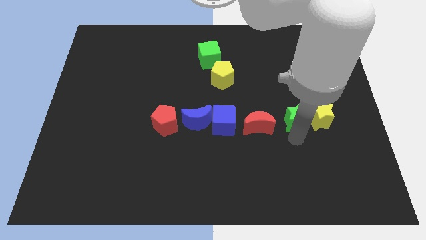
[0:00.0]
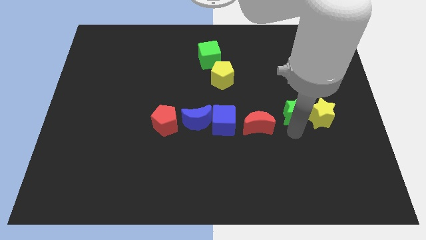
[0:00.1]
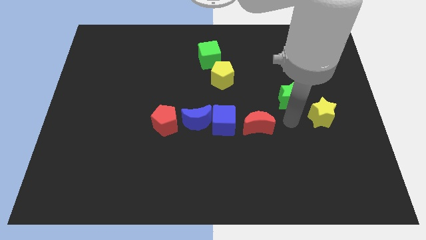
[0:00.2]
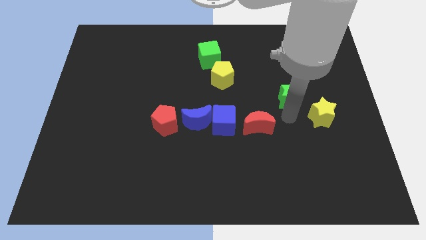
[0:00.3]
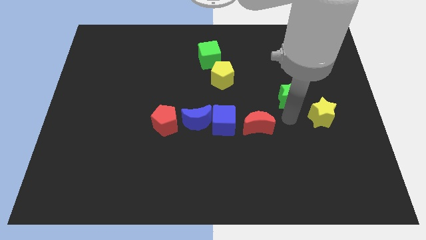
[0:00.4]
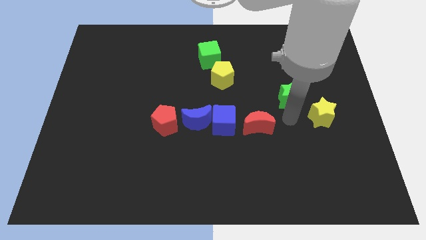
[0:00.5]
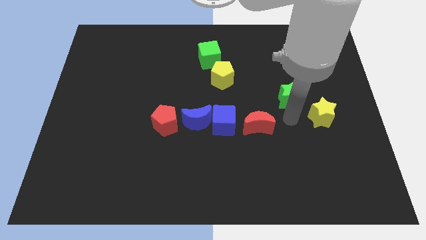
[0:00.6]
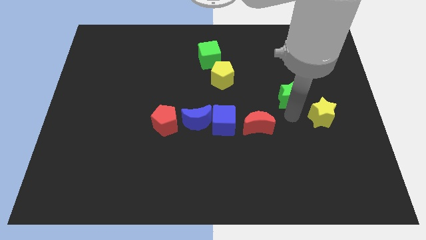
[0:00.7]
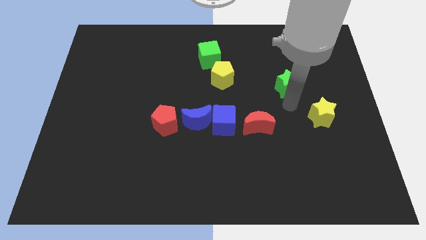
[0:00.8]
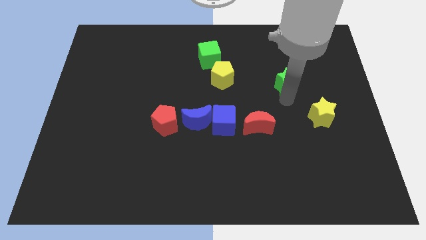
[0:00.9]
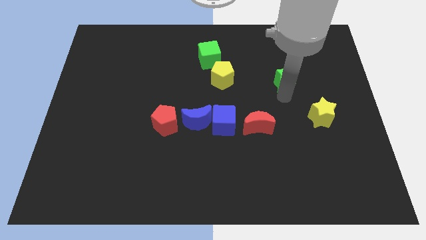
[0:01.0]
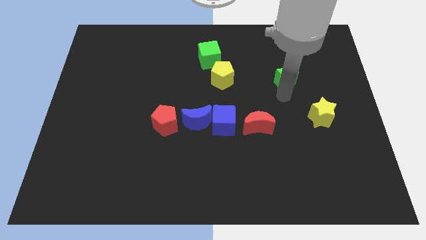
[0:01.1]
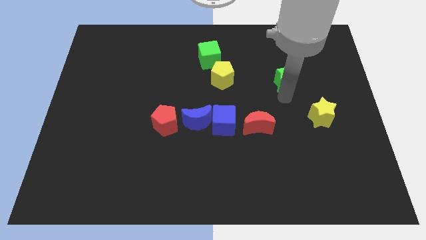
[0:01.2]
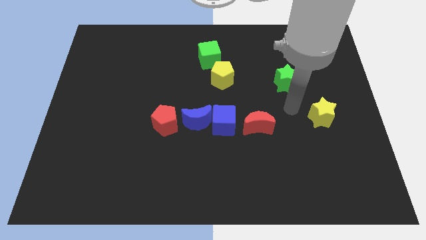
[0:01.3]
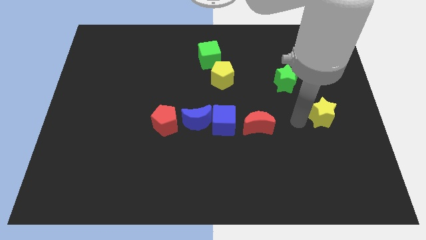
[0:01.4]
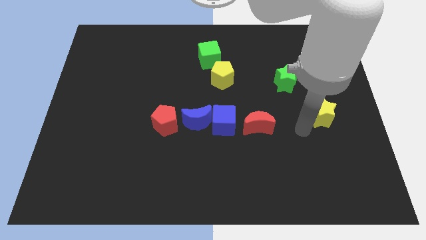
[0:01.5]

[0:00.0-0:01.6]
move the green star parallel to the right side of the yellow pentagon

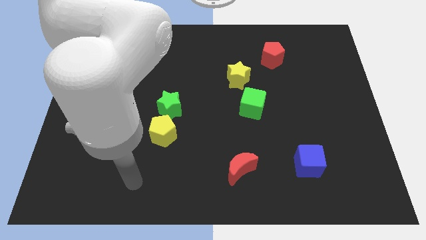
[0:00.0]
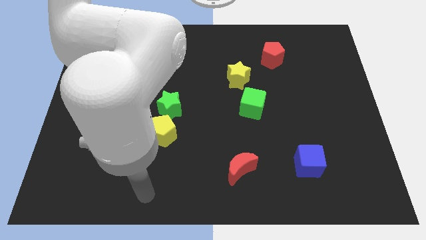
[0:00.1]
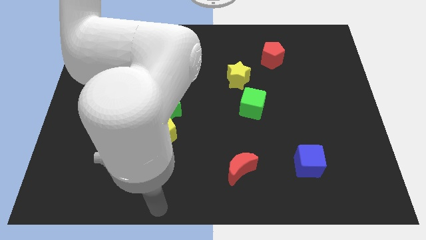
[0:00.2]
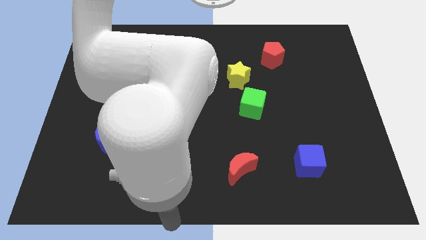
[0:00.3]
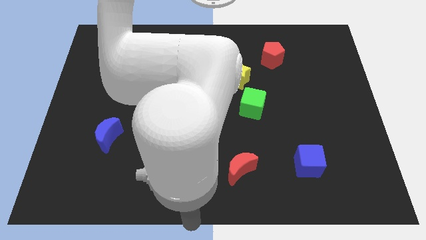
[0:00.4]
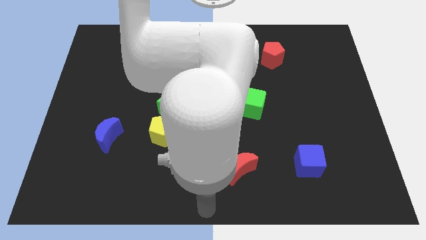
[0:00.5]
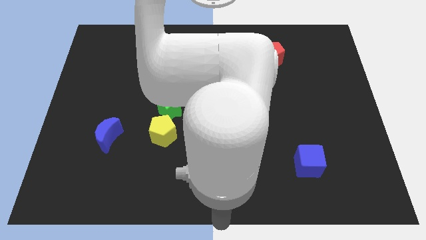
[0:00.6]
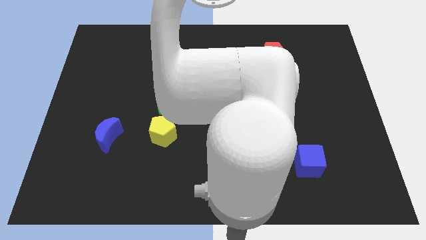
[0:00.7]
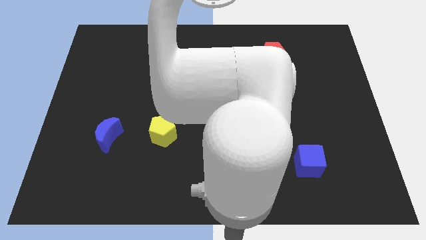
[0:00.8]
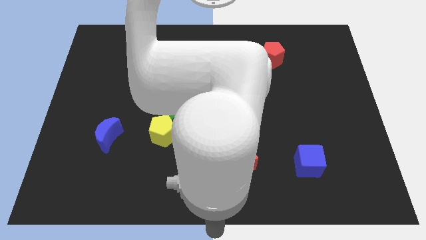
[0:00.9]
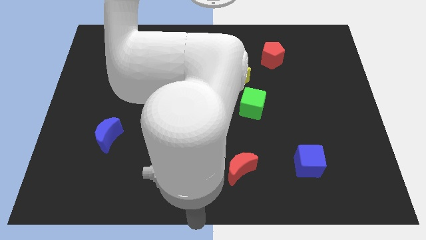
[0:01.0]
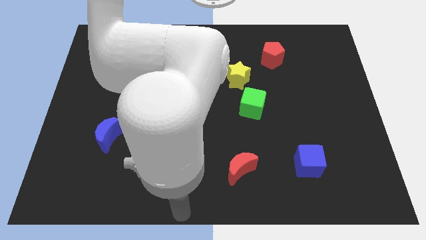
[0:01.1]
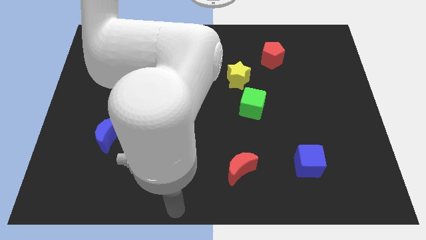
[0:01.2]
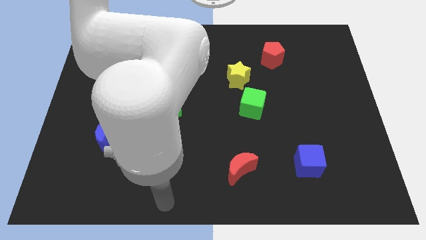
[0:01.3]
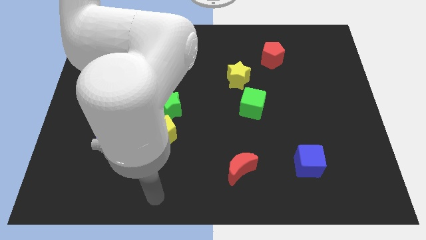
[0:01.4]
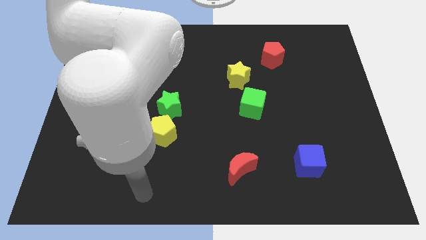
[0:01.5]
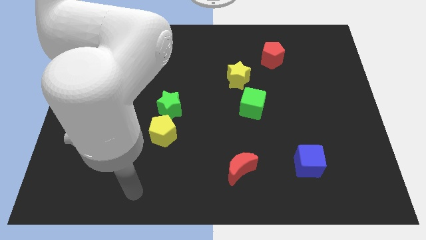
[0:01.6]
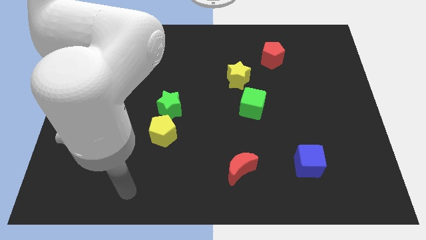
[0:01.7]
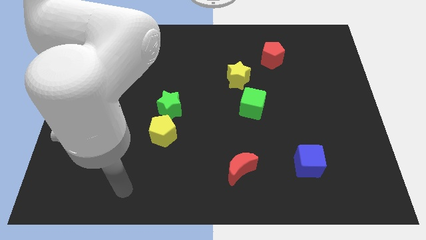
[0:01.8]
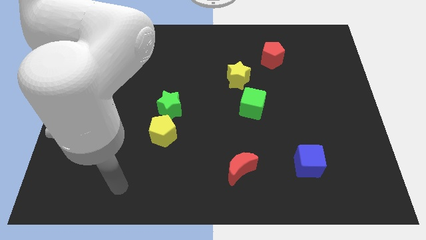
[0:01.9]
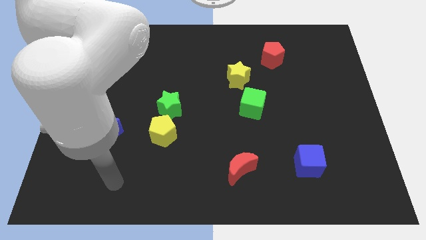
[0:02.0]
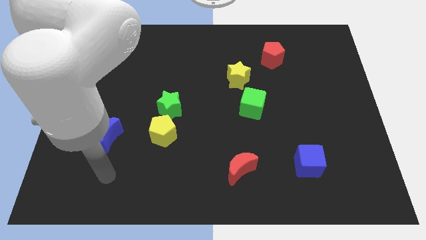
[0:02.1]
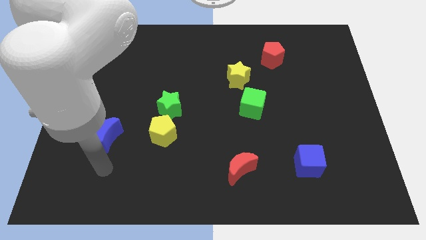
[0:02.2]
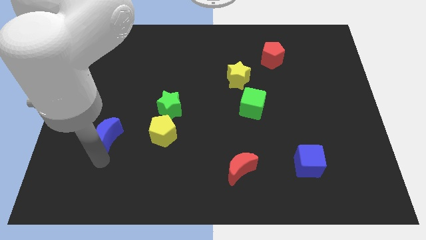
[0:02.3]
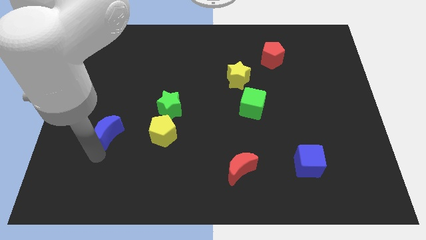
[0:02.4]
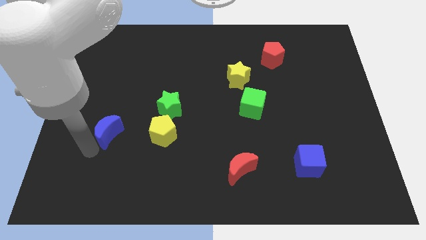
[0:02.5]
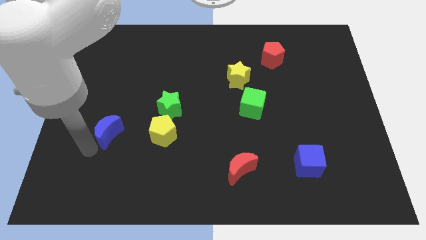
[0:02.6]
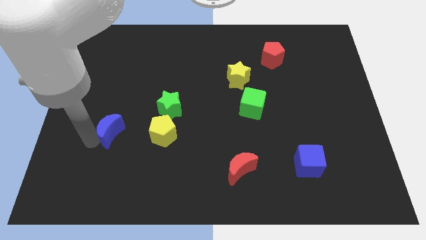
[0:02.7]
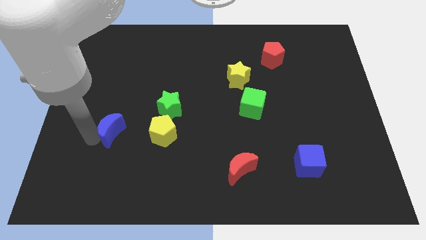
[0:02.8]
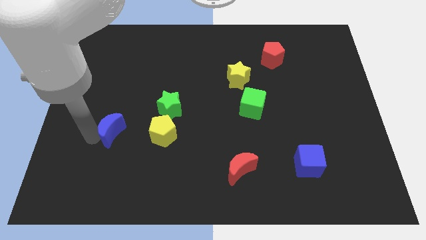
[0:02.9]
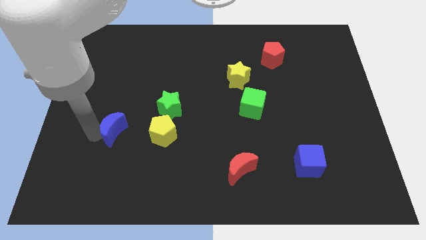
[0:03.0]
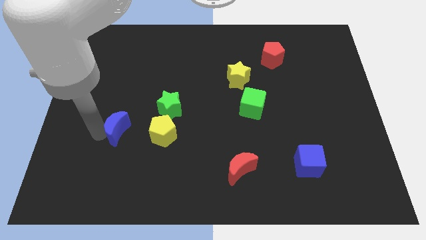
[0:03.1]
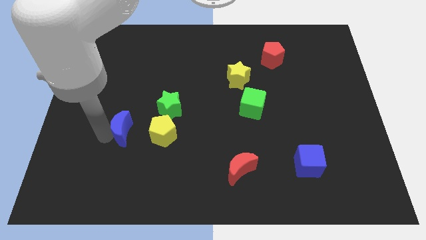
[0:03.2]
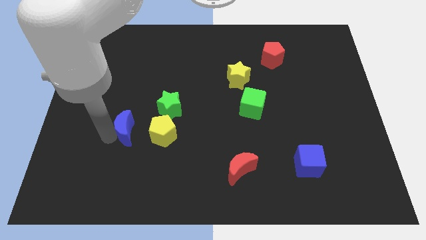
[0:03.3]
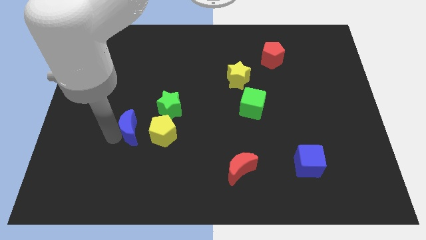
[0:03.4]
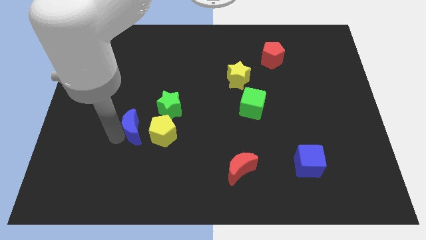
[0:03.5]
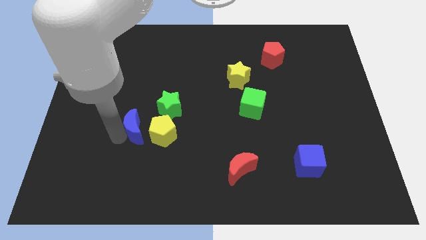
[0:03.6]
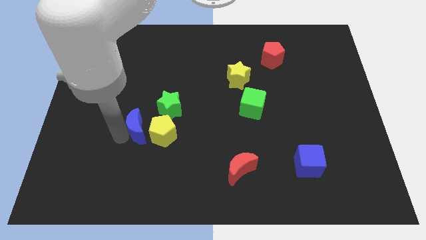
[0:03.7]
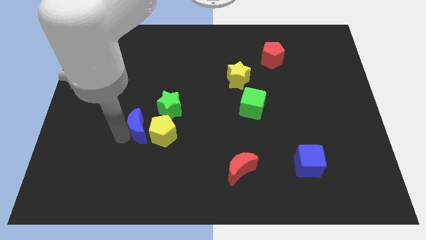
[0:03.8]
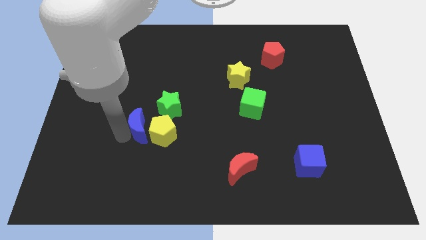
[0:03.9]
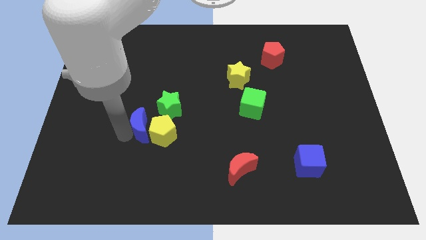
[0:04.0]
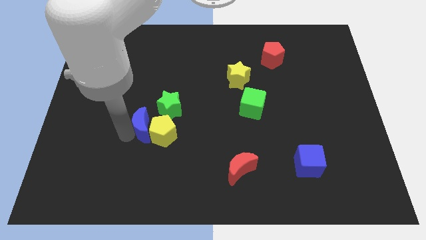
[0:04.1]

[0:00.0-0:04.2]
place the blue moon beside the yellow pentagon

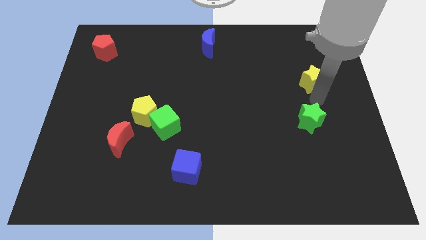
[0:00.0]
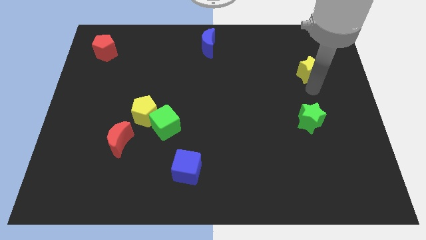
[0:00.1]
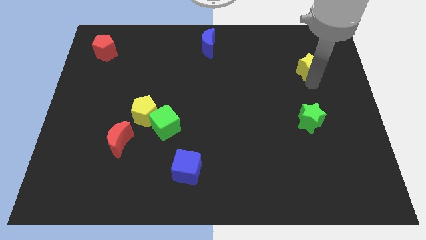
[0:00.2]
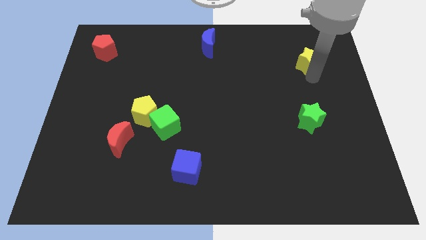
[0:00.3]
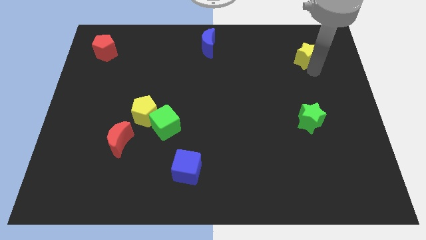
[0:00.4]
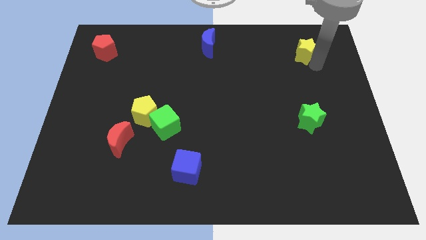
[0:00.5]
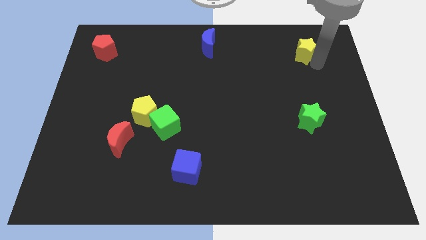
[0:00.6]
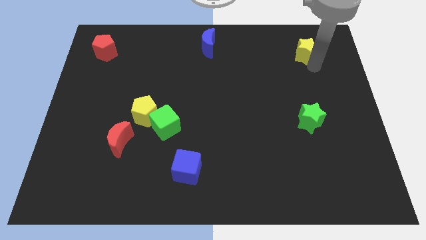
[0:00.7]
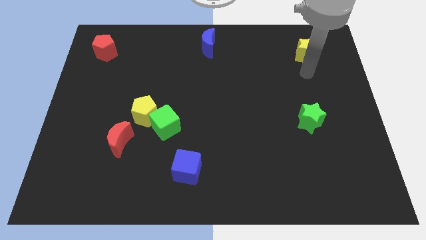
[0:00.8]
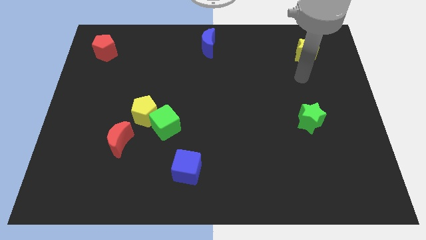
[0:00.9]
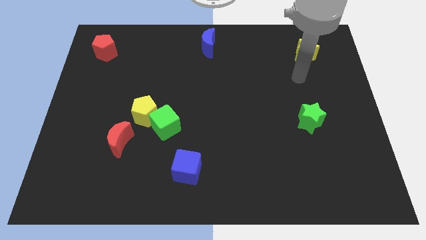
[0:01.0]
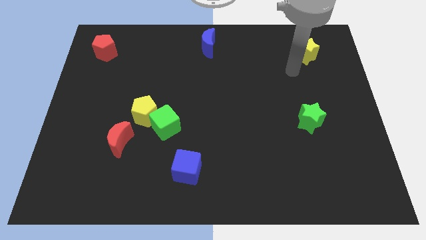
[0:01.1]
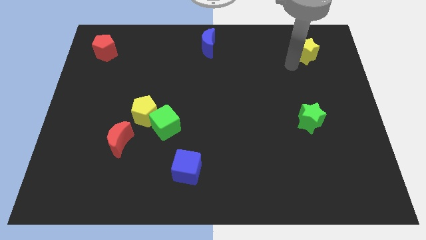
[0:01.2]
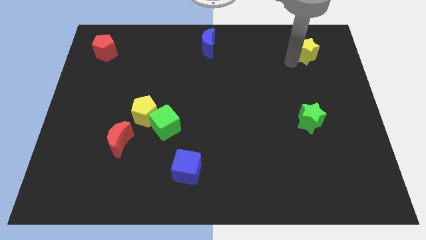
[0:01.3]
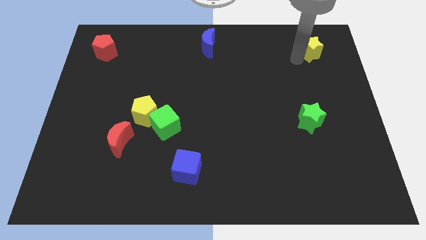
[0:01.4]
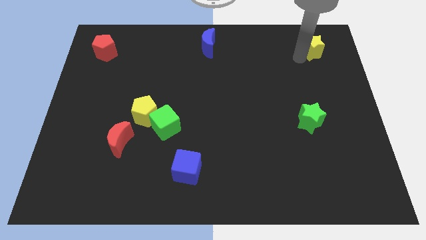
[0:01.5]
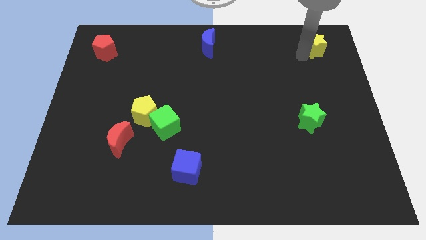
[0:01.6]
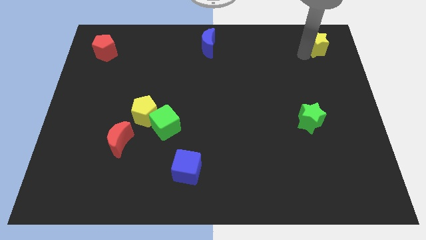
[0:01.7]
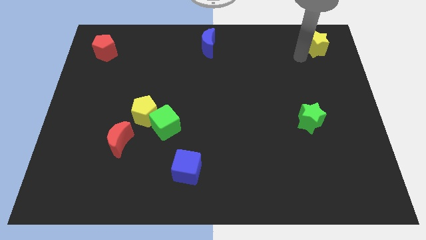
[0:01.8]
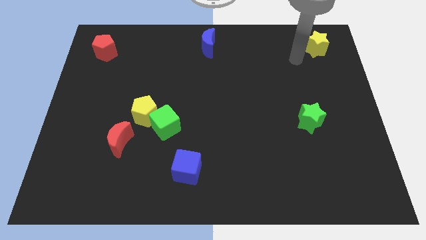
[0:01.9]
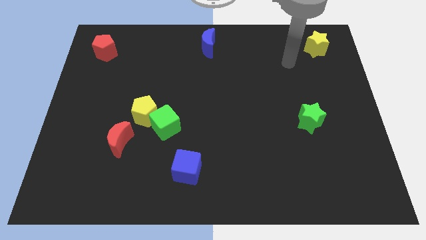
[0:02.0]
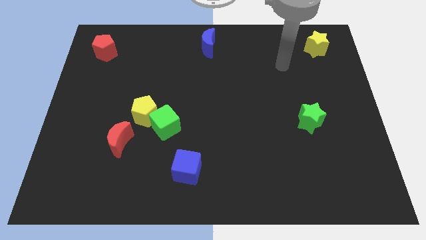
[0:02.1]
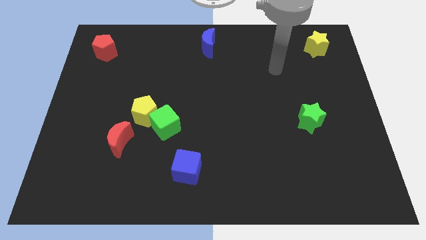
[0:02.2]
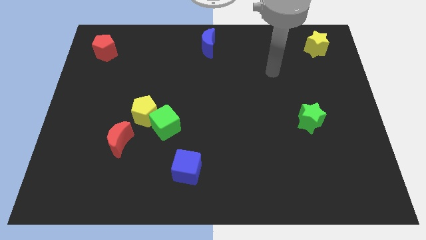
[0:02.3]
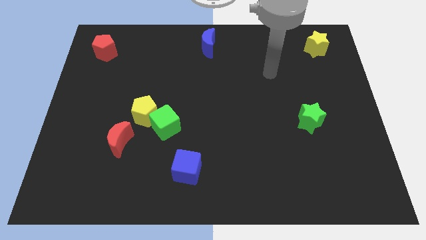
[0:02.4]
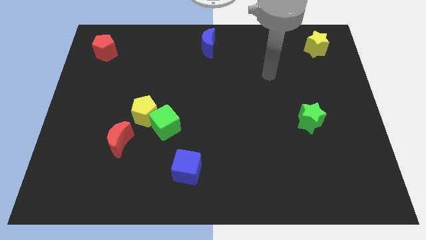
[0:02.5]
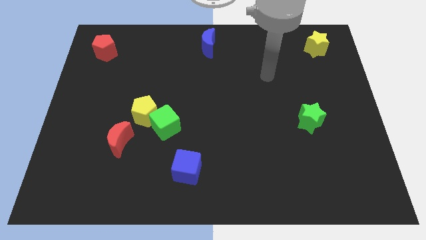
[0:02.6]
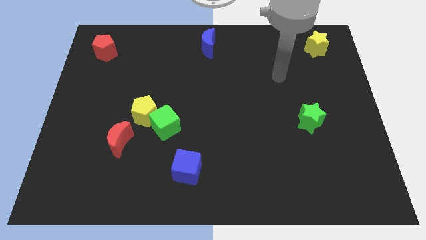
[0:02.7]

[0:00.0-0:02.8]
drag the yellow star to the top right

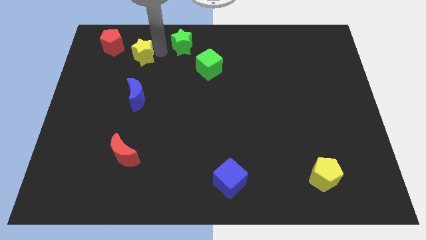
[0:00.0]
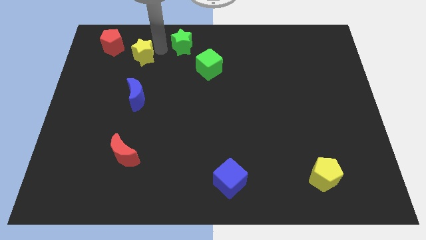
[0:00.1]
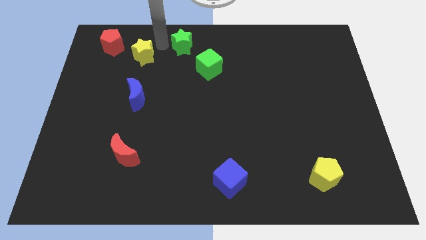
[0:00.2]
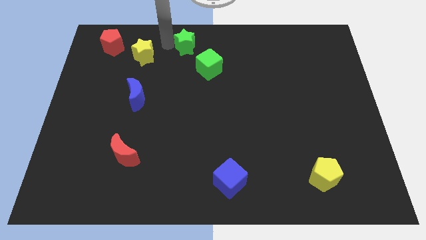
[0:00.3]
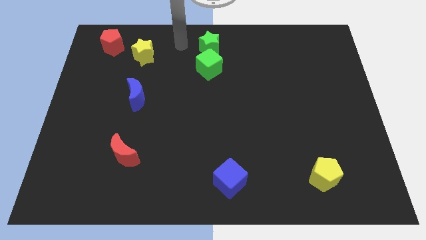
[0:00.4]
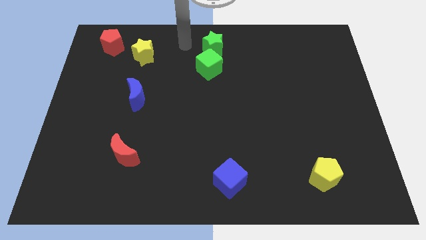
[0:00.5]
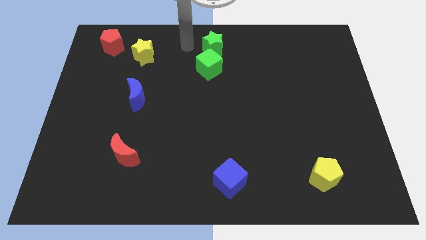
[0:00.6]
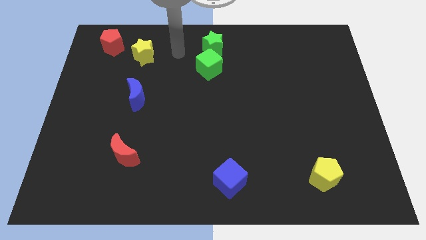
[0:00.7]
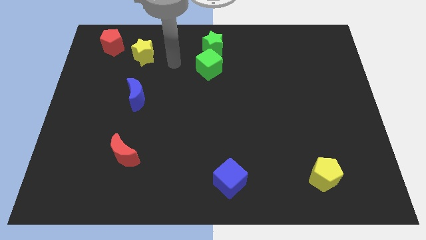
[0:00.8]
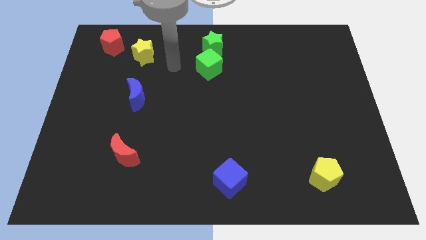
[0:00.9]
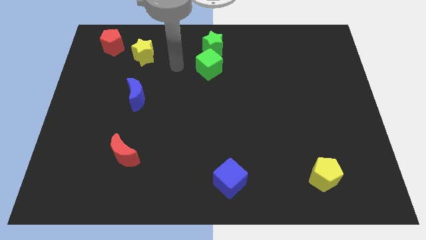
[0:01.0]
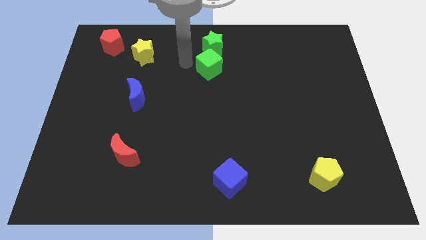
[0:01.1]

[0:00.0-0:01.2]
place the green star on top of the green cube
